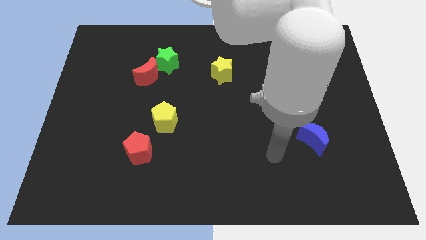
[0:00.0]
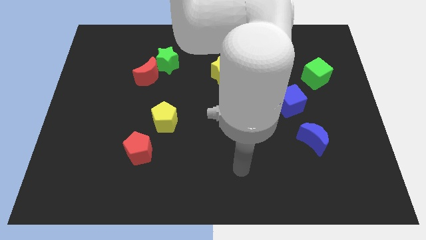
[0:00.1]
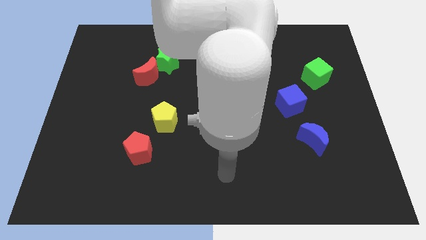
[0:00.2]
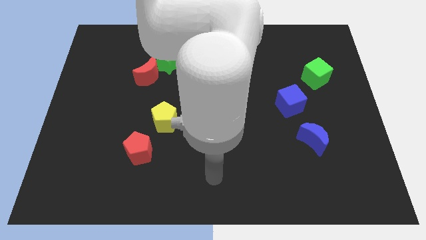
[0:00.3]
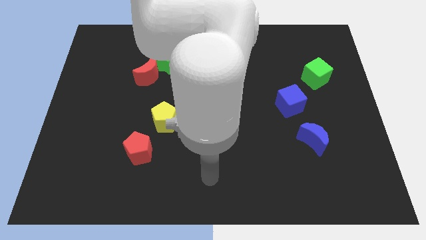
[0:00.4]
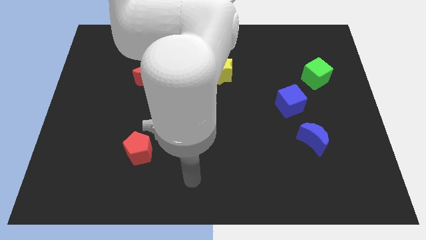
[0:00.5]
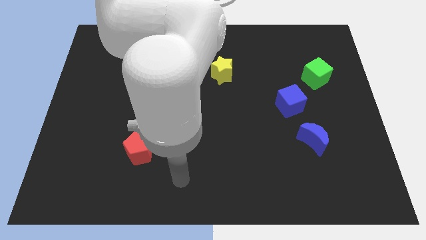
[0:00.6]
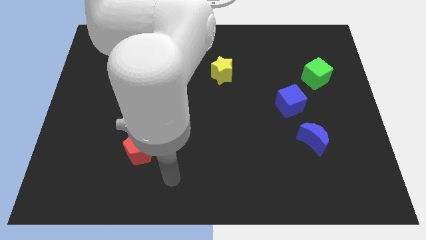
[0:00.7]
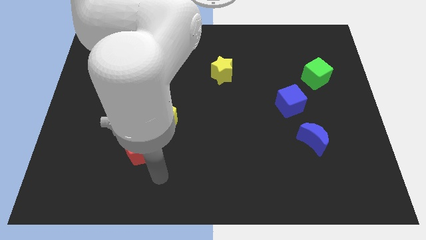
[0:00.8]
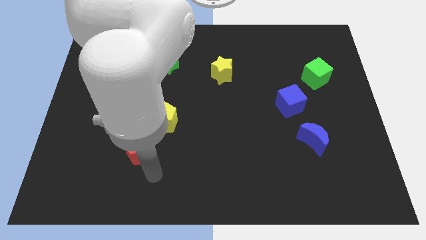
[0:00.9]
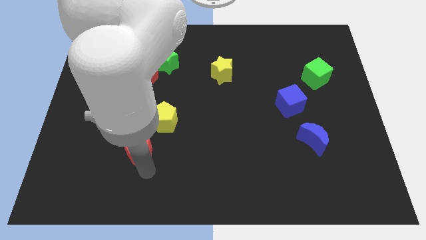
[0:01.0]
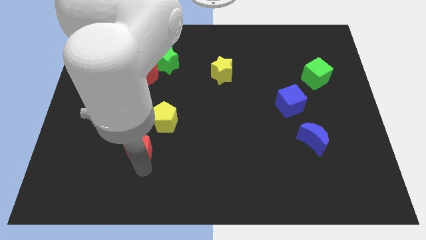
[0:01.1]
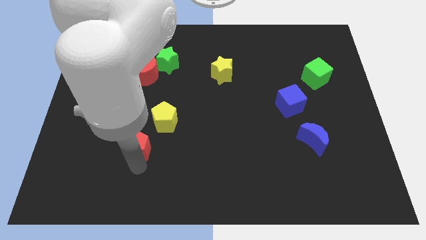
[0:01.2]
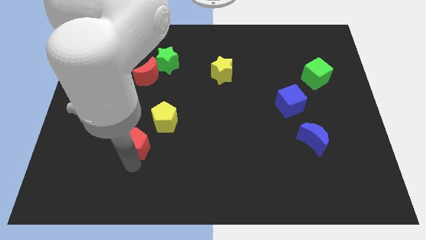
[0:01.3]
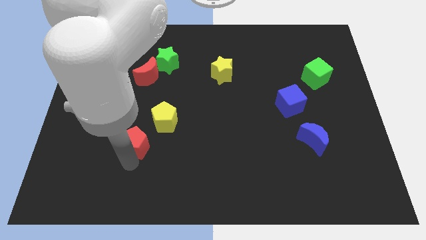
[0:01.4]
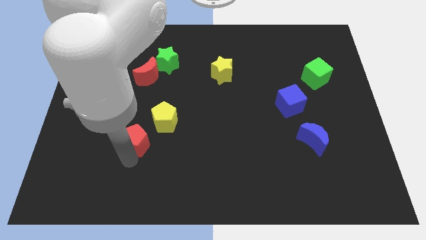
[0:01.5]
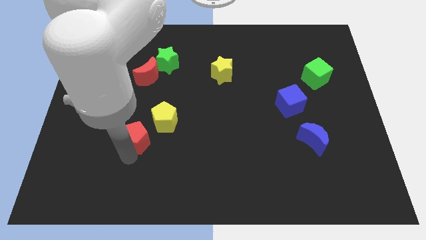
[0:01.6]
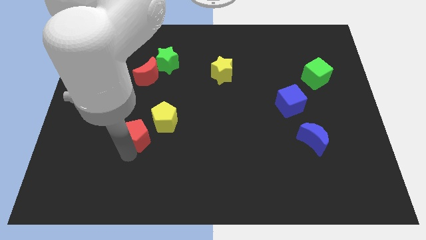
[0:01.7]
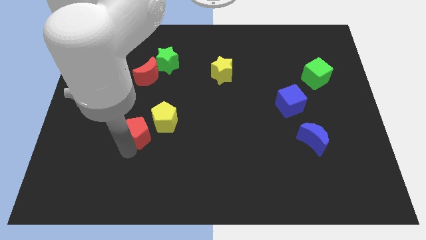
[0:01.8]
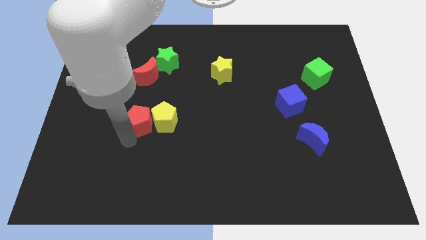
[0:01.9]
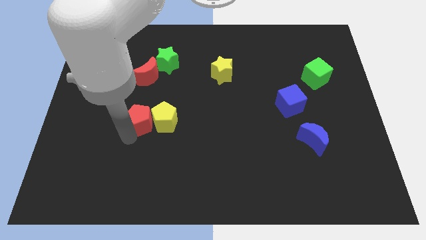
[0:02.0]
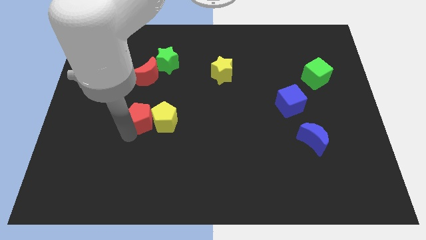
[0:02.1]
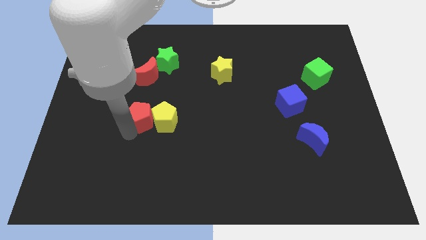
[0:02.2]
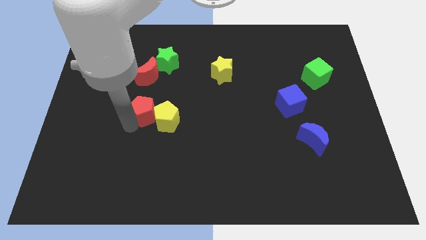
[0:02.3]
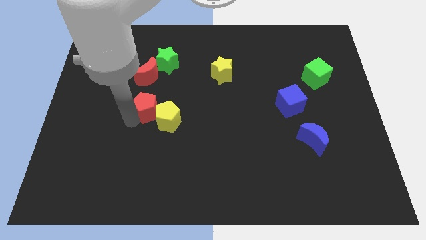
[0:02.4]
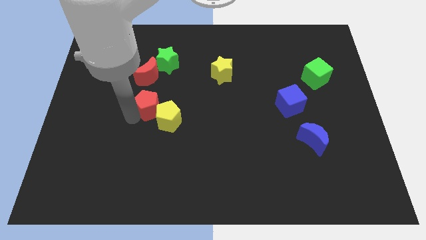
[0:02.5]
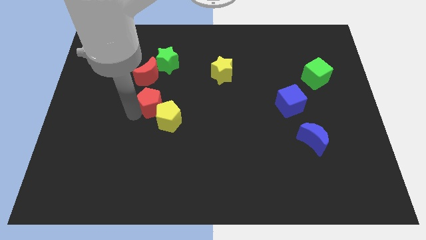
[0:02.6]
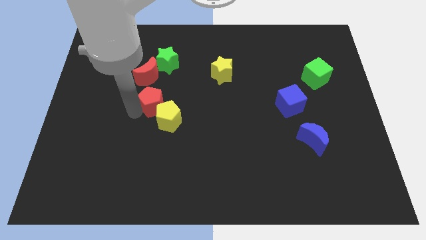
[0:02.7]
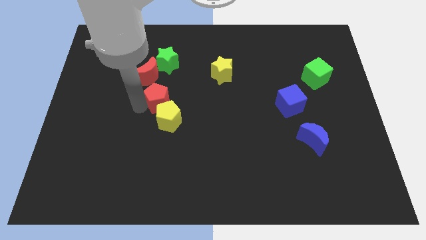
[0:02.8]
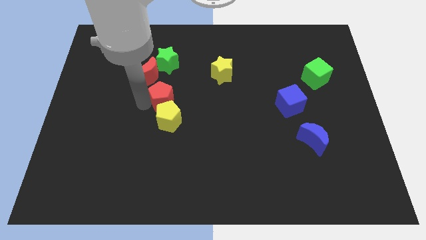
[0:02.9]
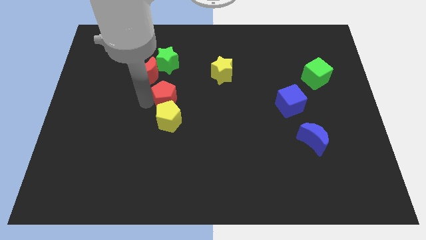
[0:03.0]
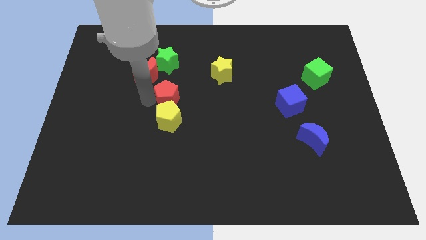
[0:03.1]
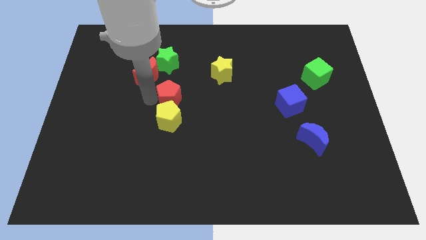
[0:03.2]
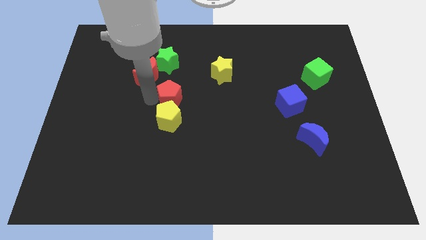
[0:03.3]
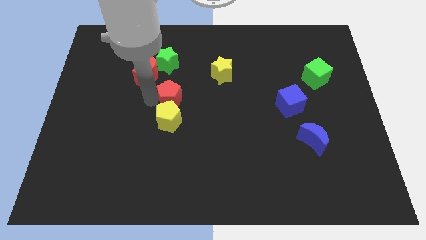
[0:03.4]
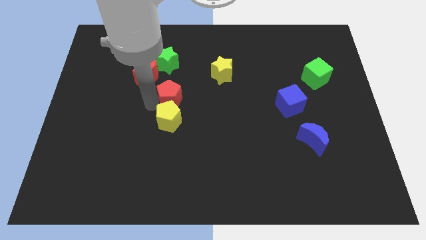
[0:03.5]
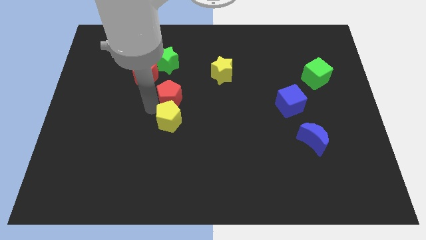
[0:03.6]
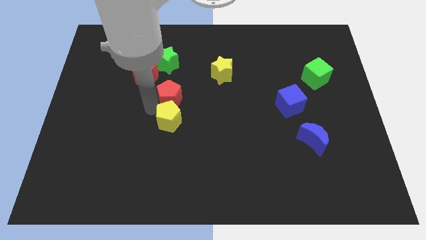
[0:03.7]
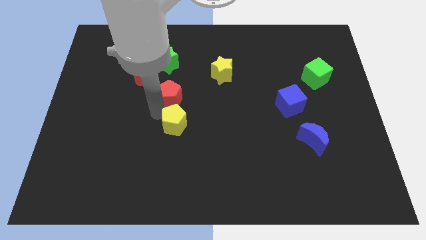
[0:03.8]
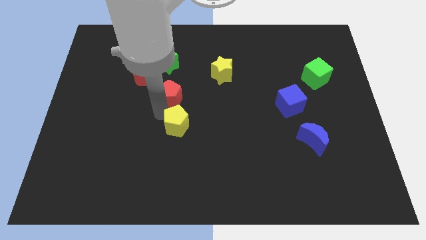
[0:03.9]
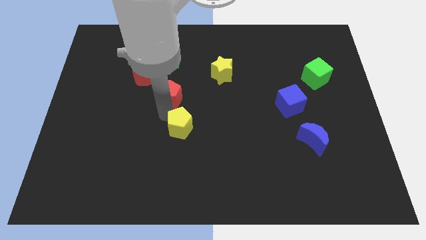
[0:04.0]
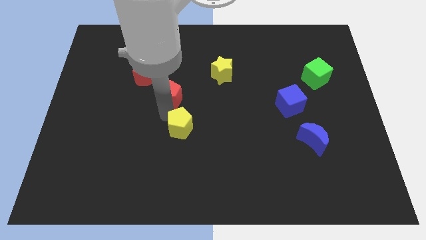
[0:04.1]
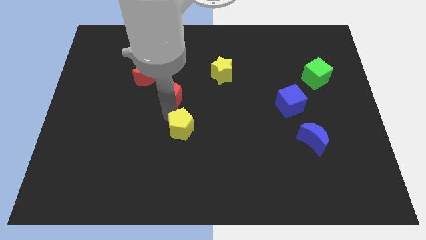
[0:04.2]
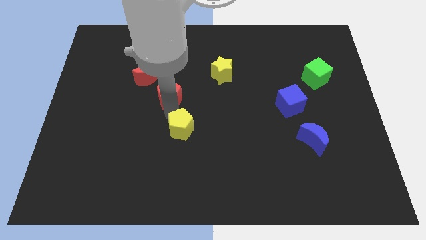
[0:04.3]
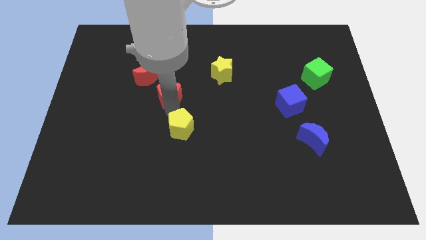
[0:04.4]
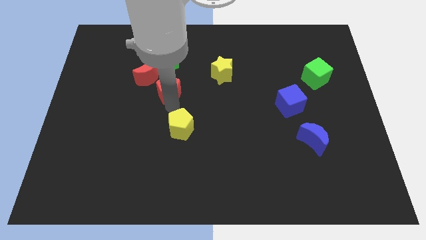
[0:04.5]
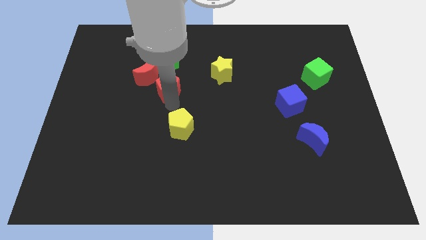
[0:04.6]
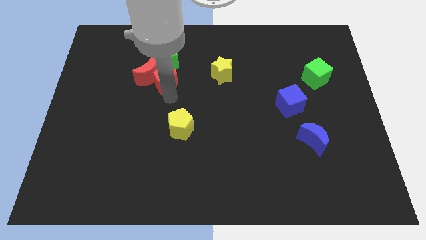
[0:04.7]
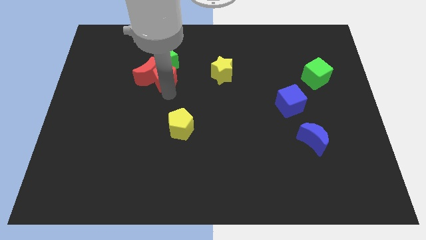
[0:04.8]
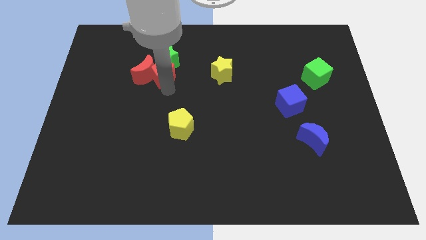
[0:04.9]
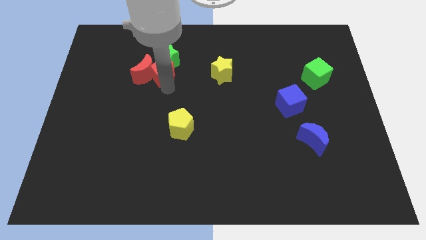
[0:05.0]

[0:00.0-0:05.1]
slide the red pentagon close to the green star

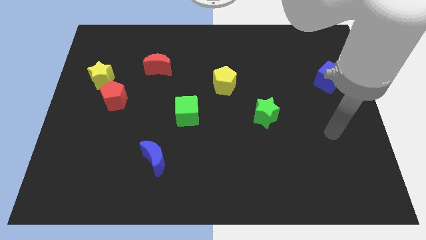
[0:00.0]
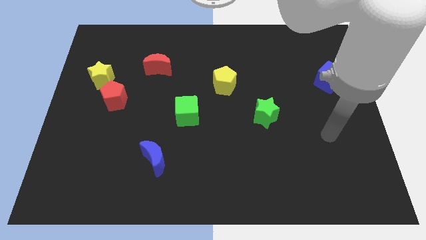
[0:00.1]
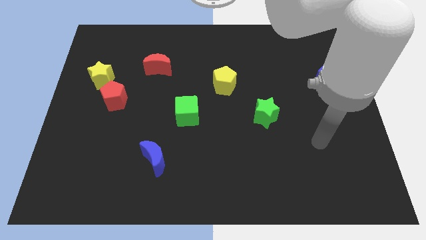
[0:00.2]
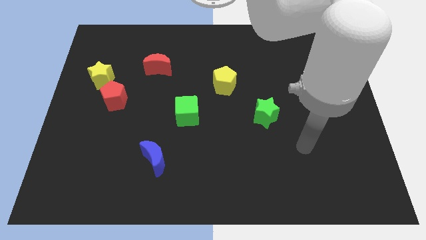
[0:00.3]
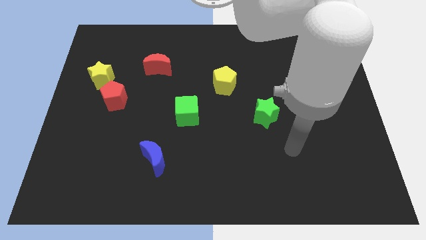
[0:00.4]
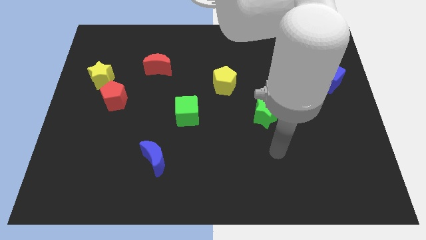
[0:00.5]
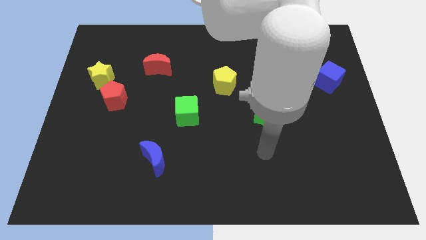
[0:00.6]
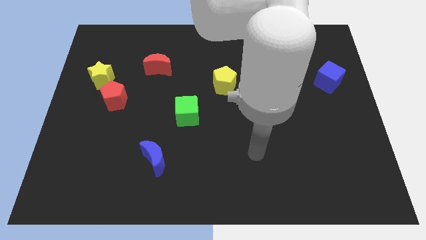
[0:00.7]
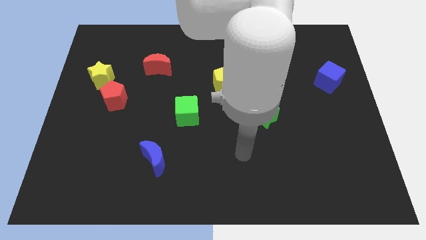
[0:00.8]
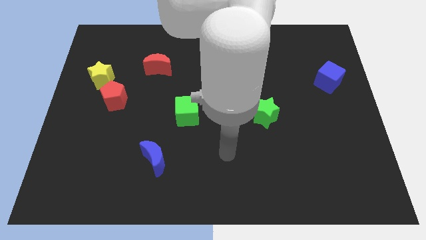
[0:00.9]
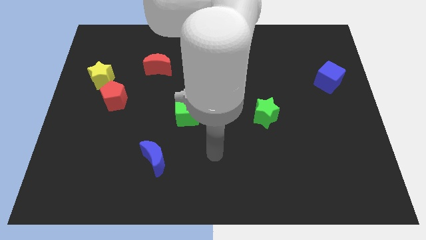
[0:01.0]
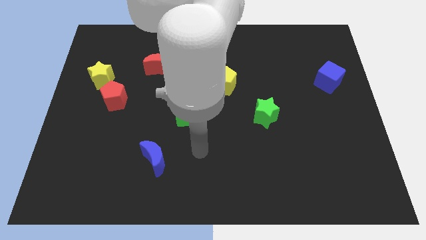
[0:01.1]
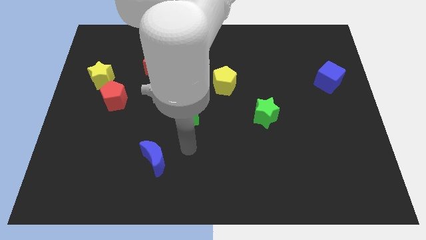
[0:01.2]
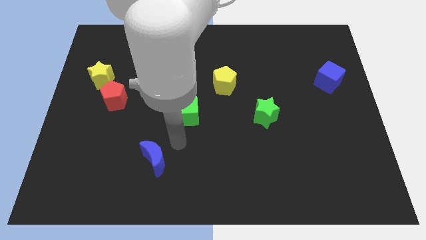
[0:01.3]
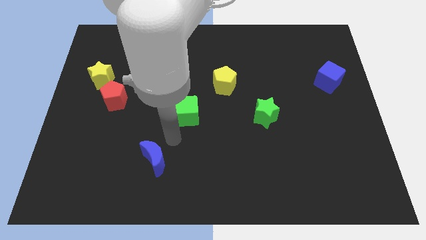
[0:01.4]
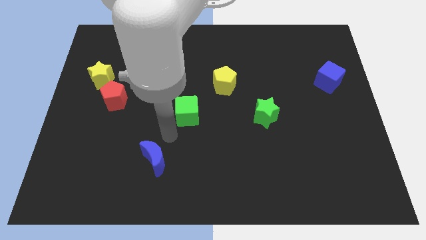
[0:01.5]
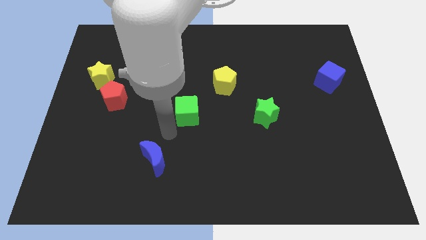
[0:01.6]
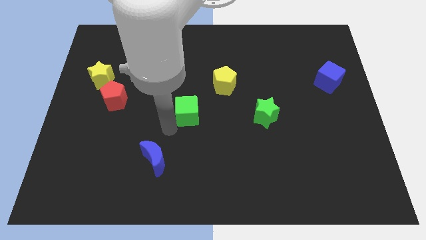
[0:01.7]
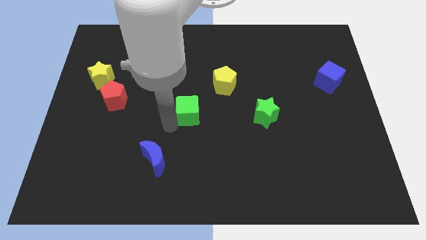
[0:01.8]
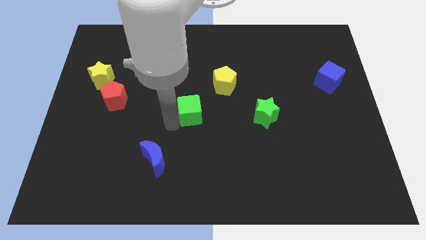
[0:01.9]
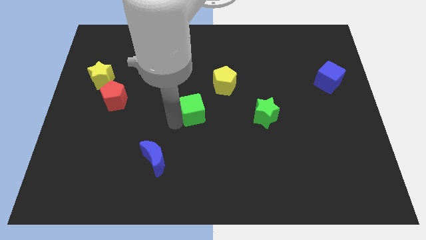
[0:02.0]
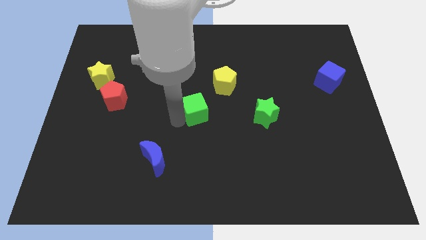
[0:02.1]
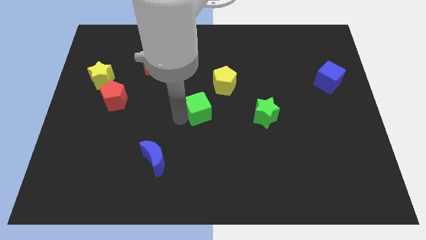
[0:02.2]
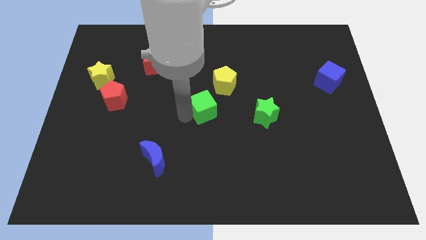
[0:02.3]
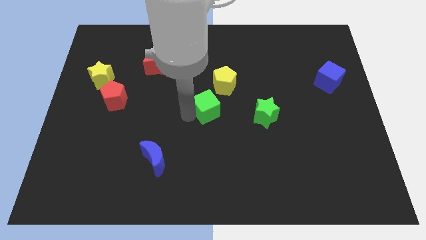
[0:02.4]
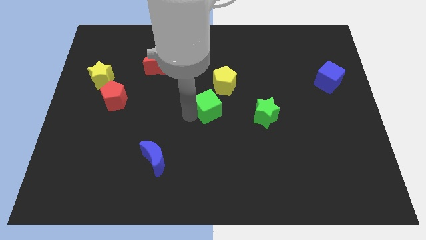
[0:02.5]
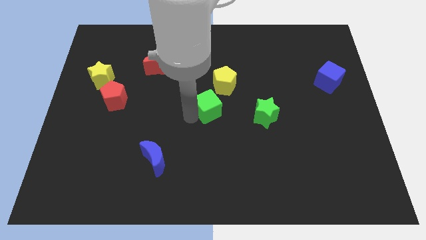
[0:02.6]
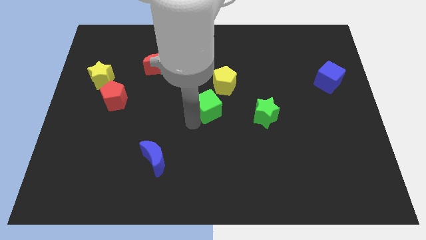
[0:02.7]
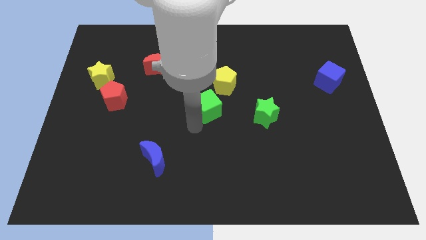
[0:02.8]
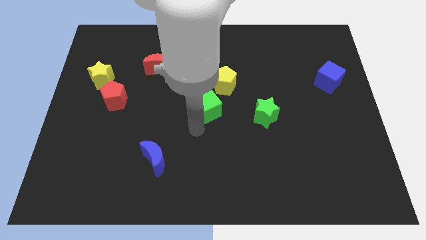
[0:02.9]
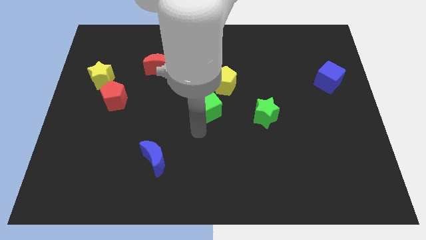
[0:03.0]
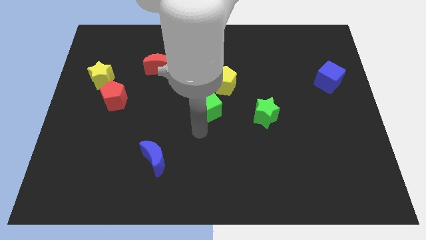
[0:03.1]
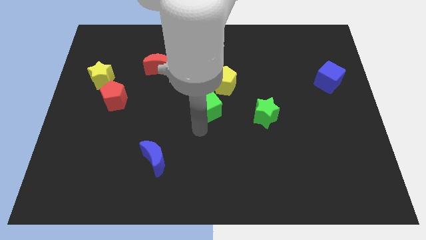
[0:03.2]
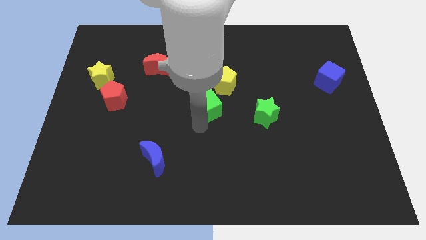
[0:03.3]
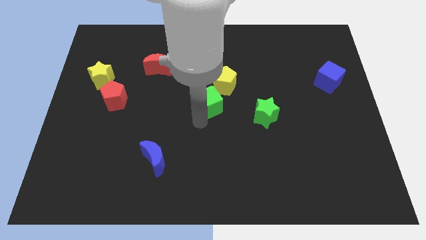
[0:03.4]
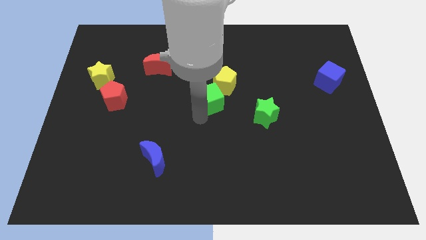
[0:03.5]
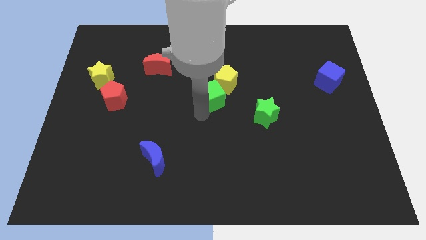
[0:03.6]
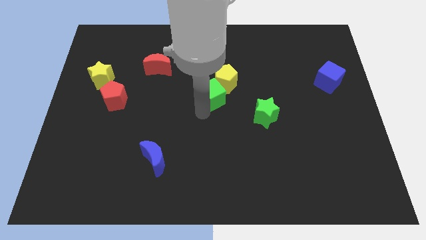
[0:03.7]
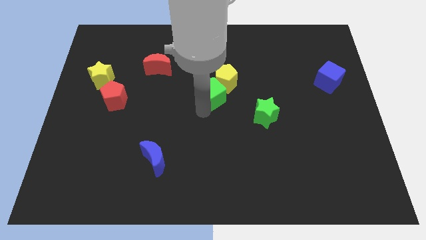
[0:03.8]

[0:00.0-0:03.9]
move the green cube next to the yellow pentagon
